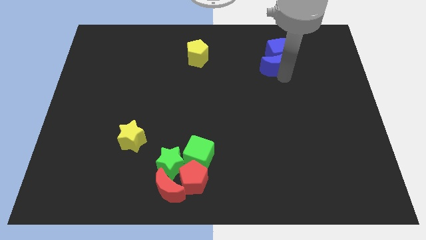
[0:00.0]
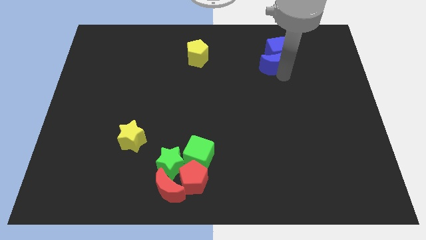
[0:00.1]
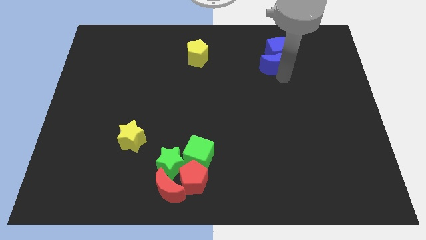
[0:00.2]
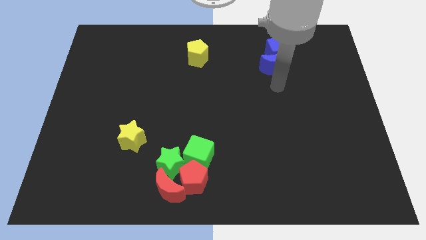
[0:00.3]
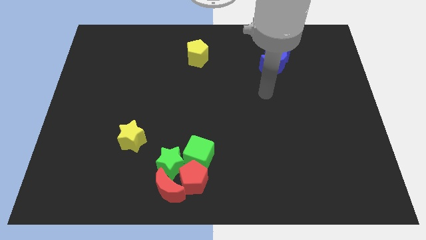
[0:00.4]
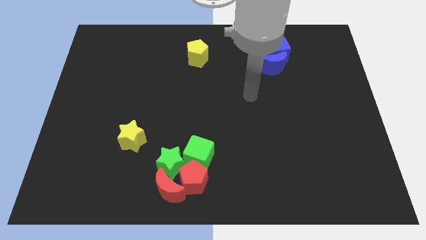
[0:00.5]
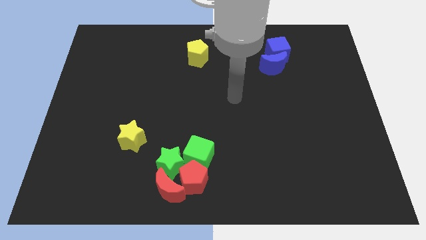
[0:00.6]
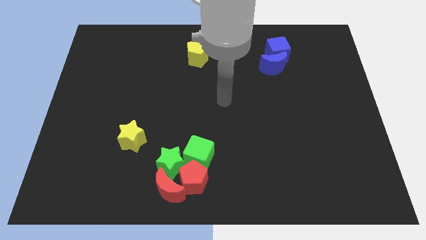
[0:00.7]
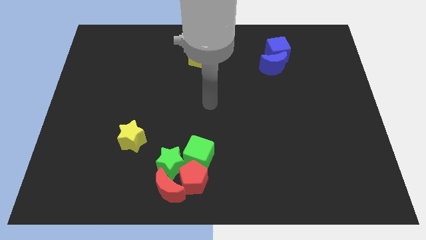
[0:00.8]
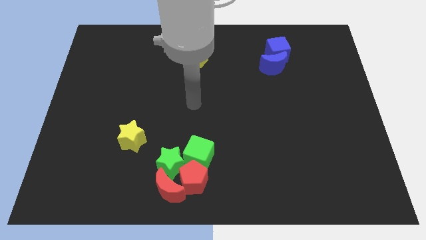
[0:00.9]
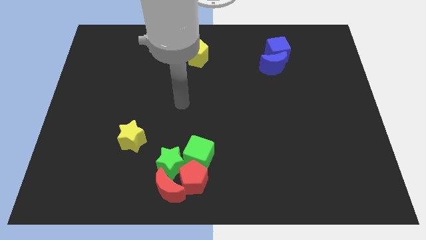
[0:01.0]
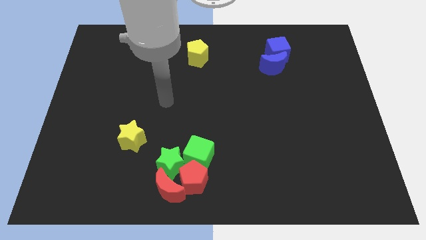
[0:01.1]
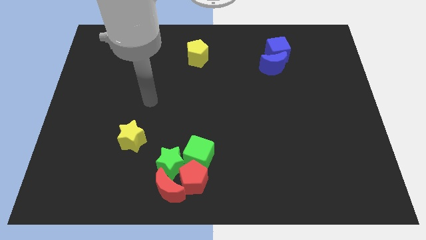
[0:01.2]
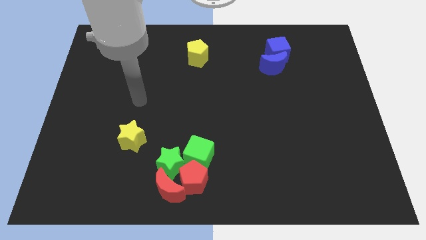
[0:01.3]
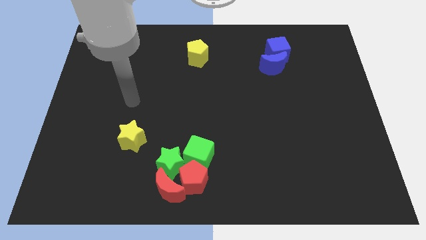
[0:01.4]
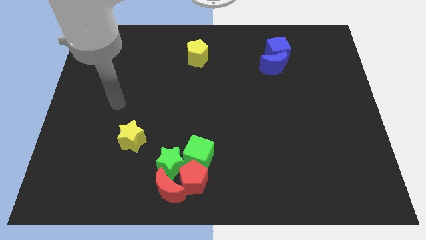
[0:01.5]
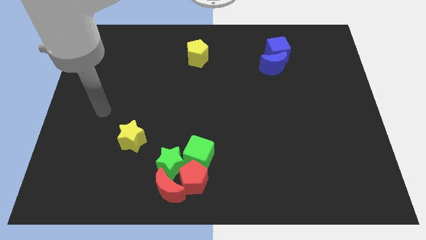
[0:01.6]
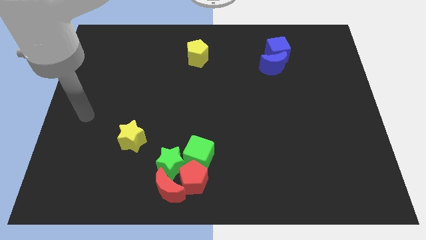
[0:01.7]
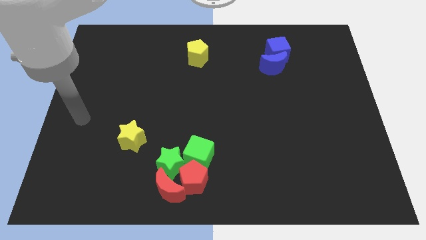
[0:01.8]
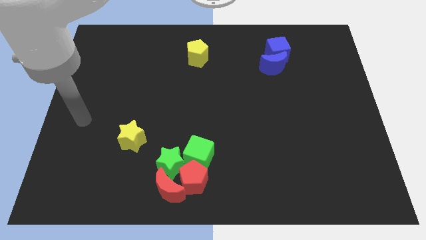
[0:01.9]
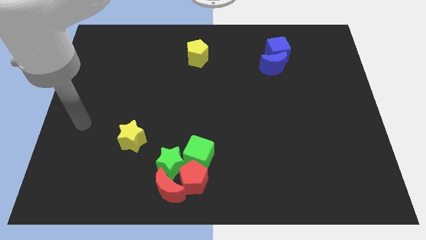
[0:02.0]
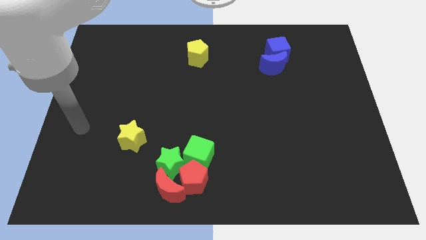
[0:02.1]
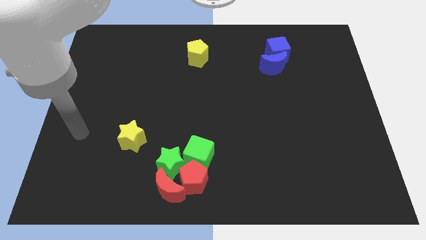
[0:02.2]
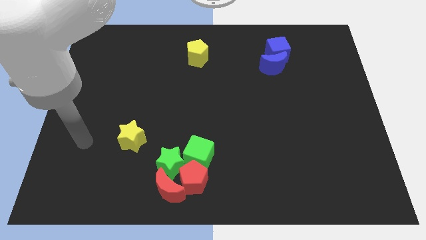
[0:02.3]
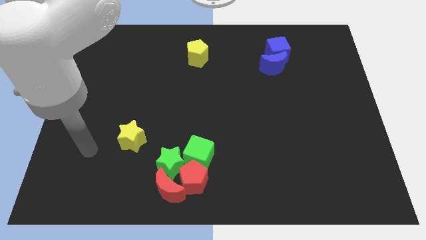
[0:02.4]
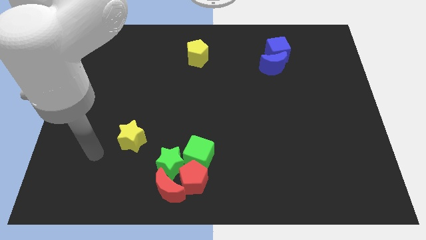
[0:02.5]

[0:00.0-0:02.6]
place the arm near yellow star

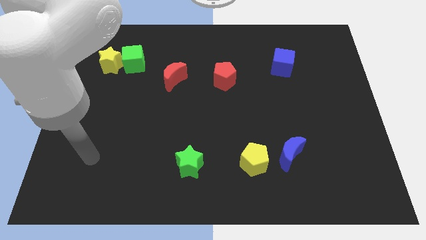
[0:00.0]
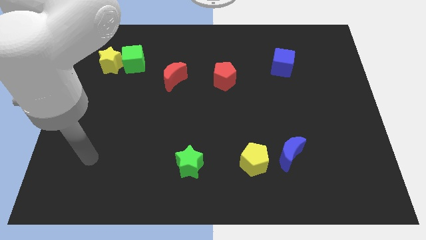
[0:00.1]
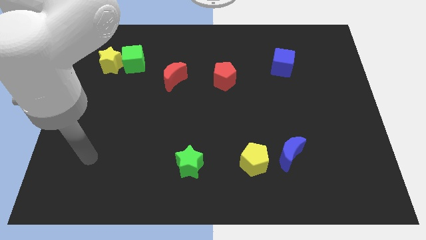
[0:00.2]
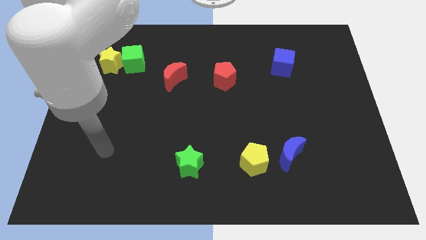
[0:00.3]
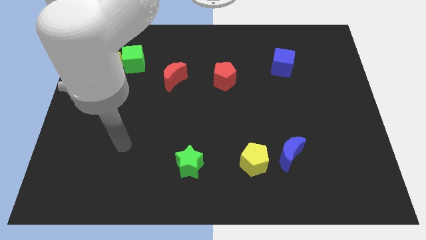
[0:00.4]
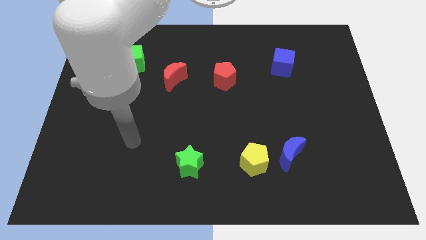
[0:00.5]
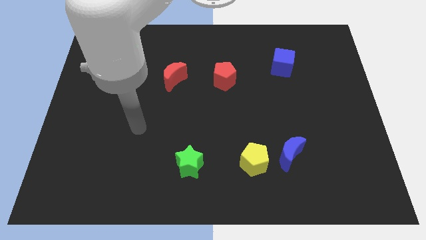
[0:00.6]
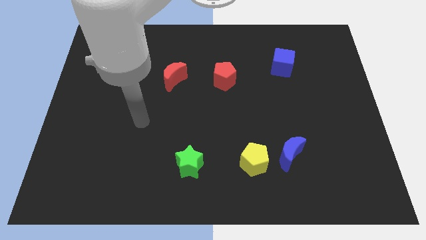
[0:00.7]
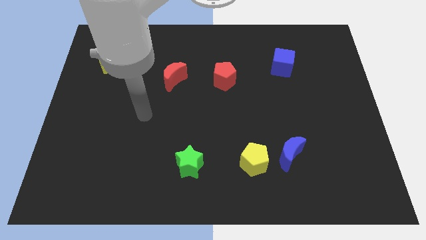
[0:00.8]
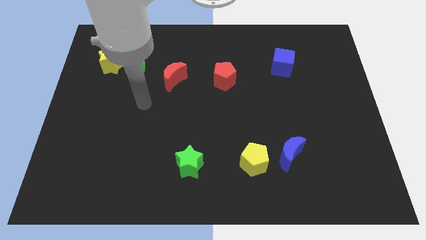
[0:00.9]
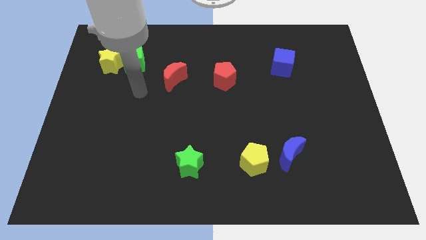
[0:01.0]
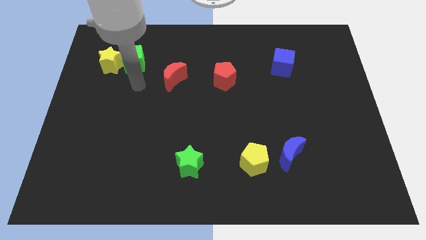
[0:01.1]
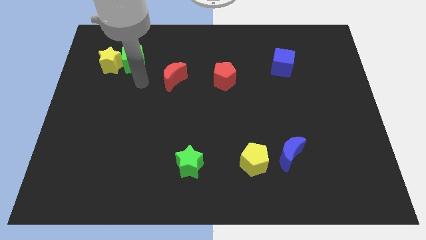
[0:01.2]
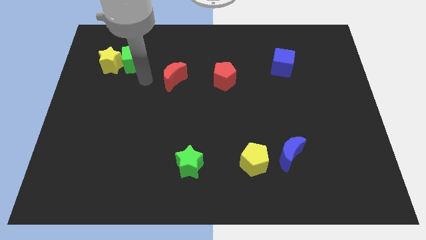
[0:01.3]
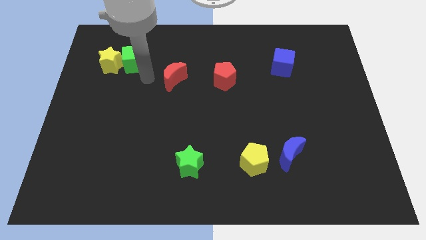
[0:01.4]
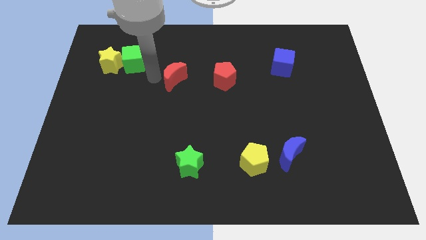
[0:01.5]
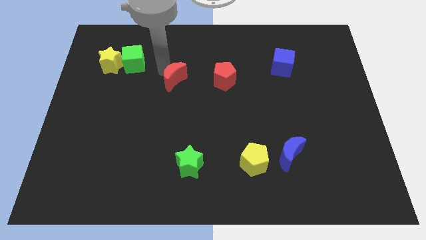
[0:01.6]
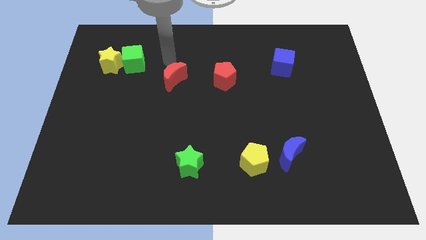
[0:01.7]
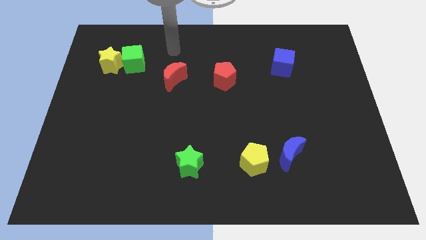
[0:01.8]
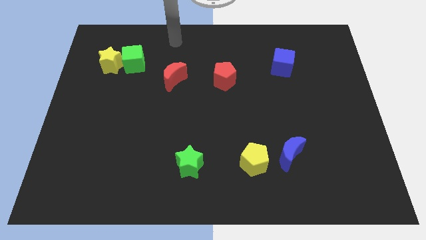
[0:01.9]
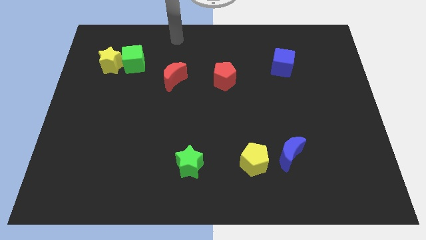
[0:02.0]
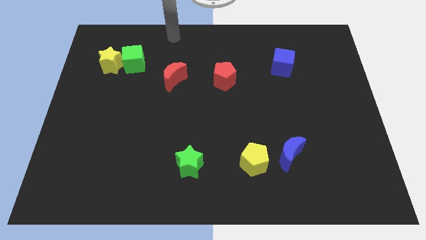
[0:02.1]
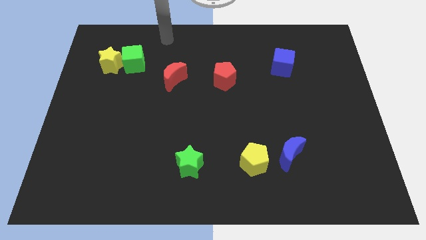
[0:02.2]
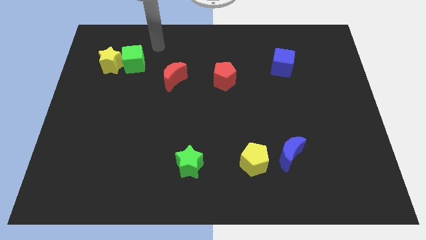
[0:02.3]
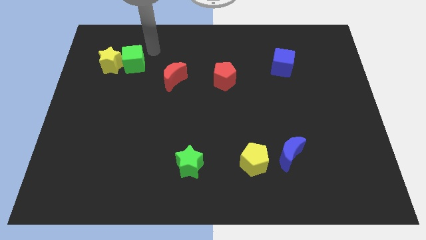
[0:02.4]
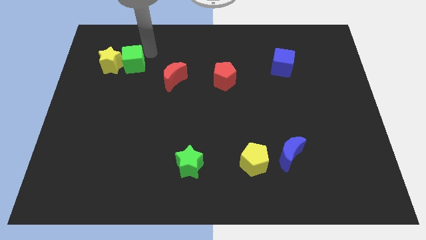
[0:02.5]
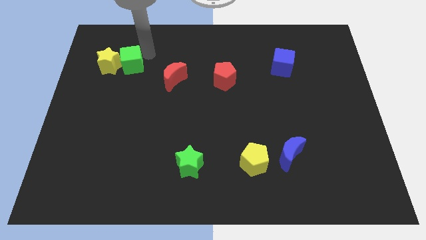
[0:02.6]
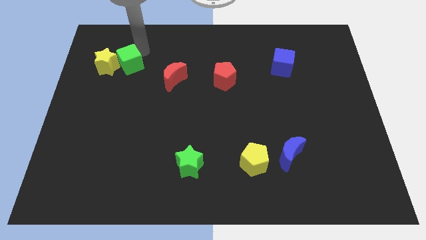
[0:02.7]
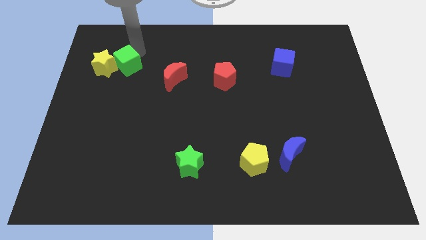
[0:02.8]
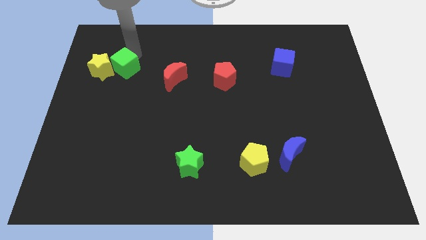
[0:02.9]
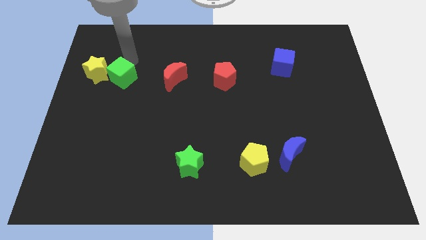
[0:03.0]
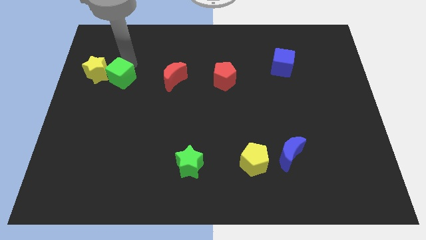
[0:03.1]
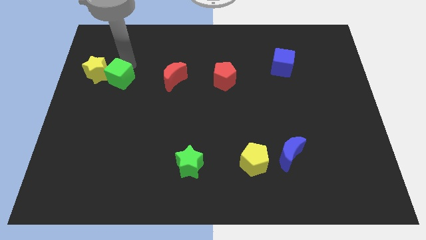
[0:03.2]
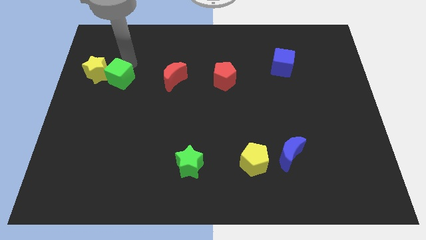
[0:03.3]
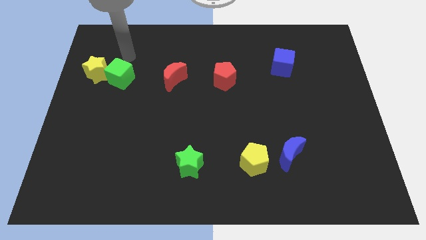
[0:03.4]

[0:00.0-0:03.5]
push the green cube along with yellow star slightly to left

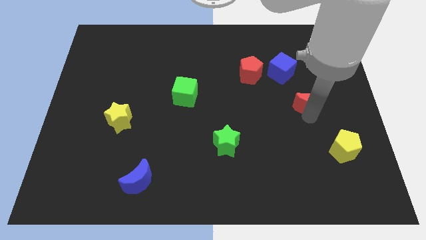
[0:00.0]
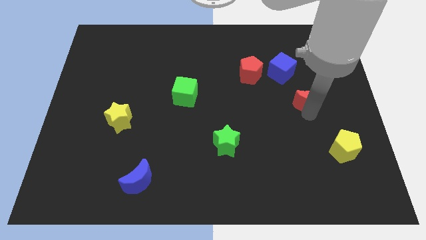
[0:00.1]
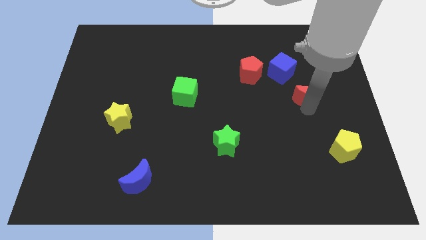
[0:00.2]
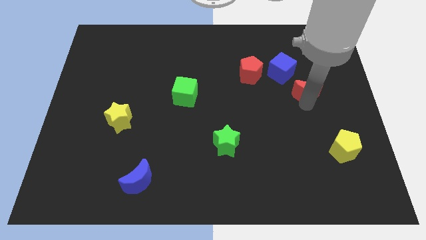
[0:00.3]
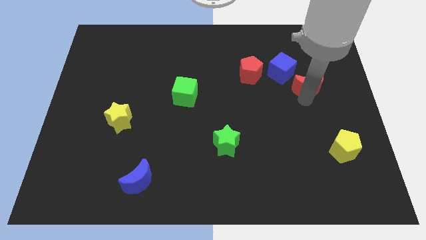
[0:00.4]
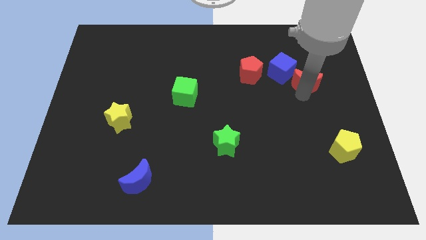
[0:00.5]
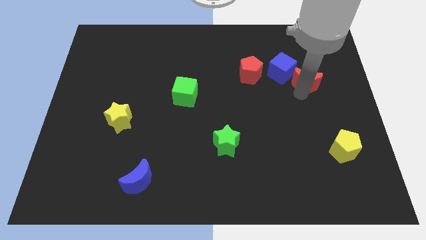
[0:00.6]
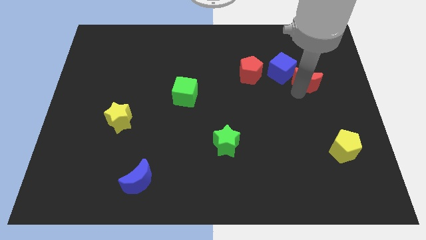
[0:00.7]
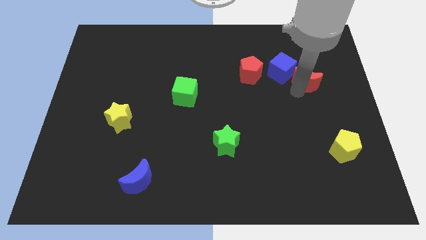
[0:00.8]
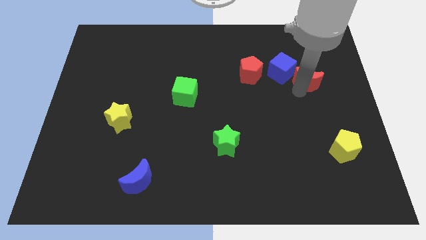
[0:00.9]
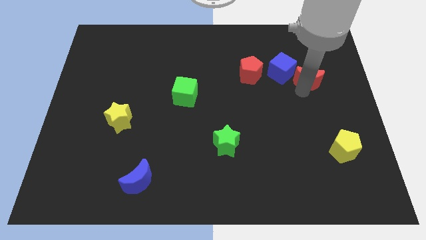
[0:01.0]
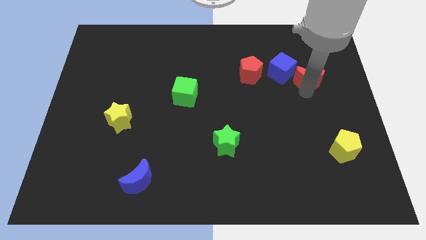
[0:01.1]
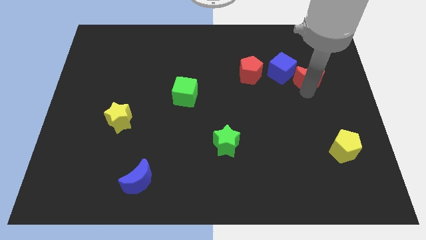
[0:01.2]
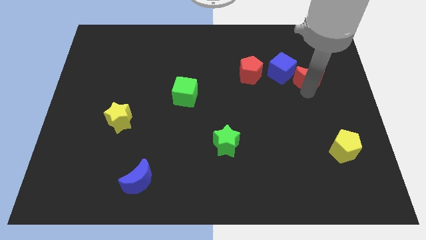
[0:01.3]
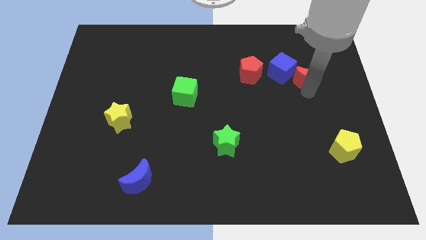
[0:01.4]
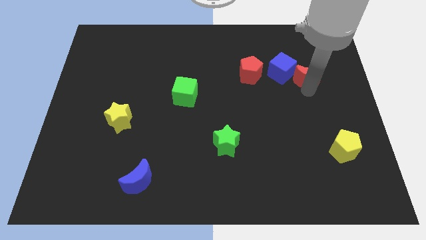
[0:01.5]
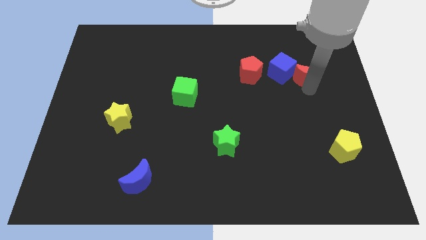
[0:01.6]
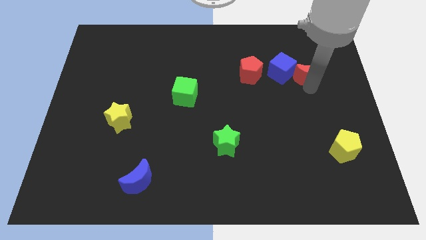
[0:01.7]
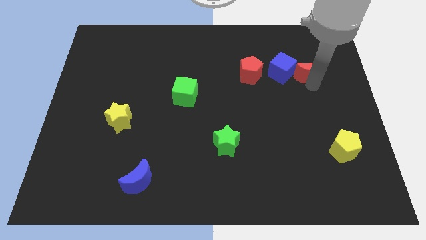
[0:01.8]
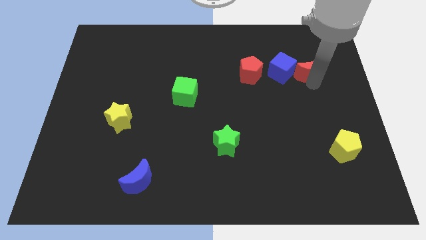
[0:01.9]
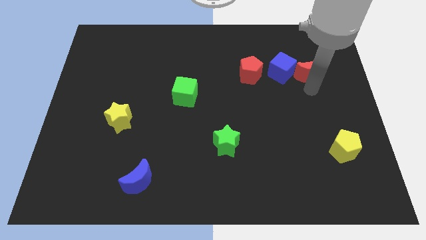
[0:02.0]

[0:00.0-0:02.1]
place the red crescent right to the blue cube

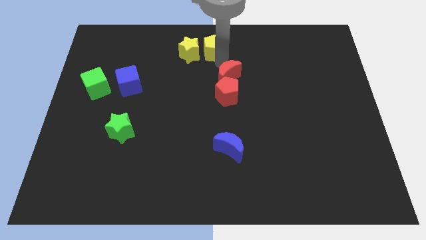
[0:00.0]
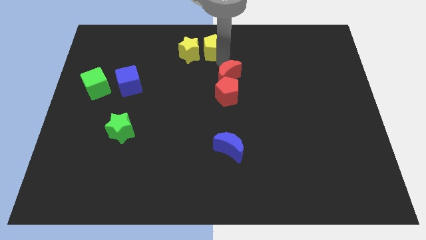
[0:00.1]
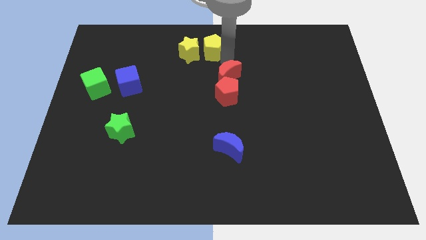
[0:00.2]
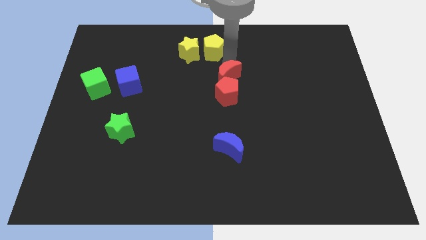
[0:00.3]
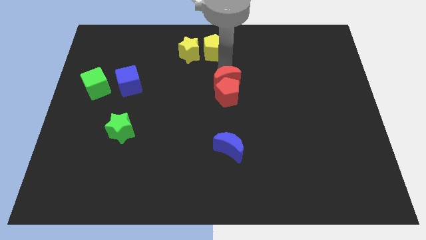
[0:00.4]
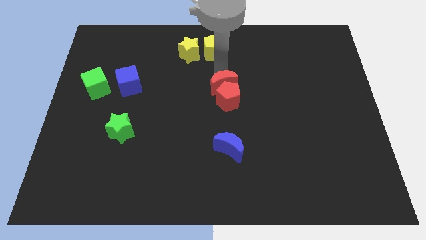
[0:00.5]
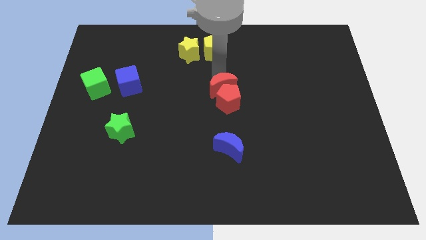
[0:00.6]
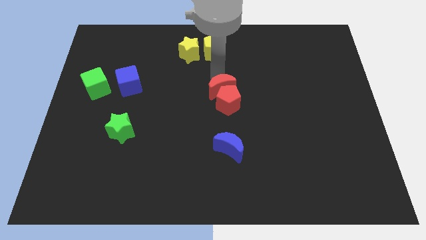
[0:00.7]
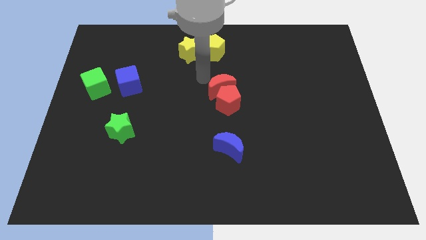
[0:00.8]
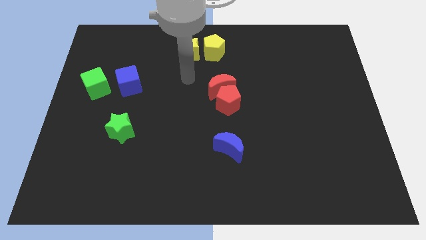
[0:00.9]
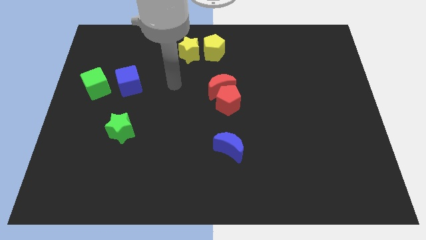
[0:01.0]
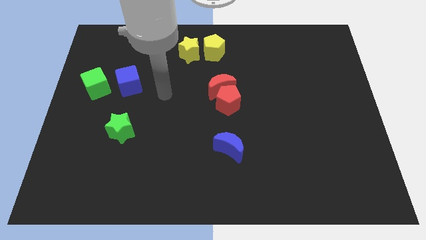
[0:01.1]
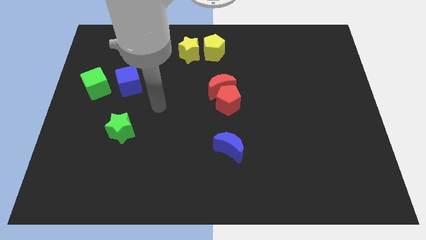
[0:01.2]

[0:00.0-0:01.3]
push the red moon into red pentagon
